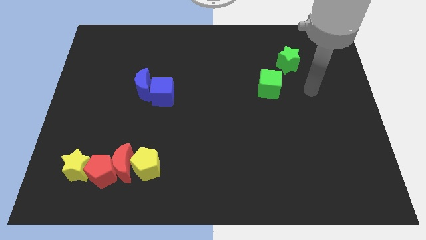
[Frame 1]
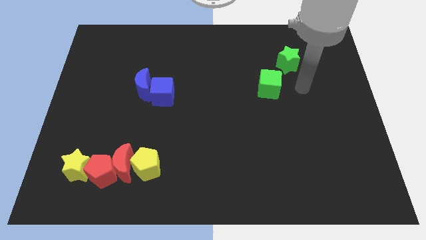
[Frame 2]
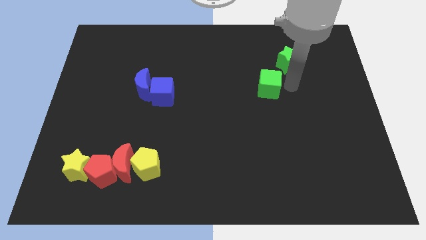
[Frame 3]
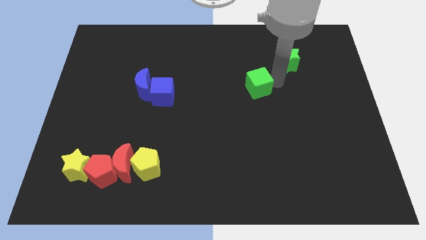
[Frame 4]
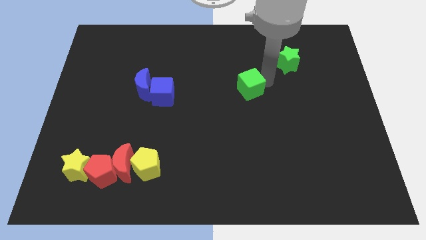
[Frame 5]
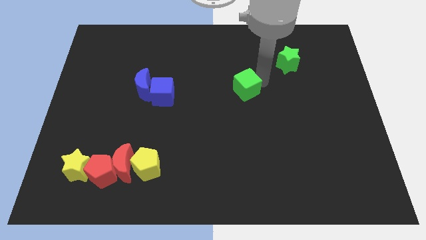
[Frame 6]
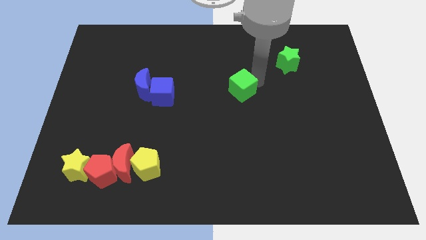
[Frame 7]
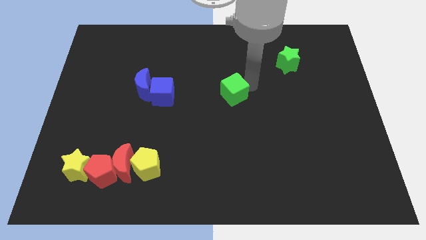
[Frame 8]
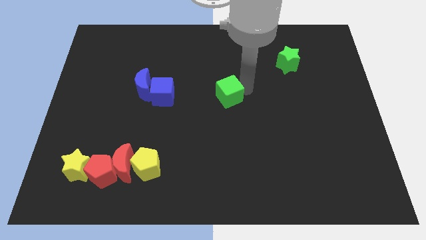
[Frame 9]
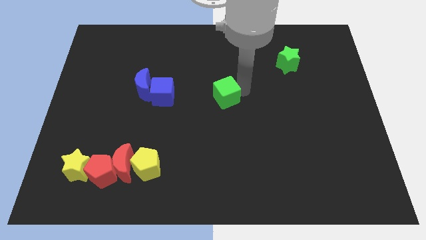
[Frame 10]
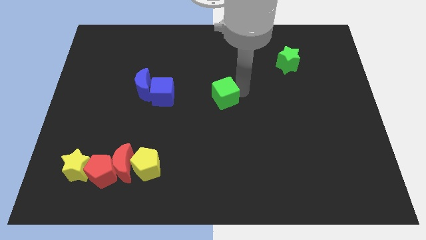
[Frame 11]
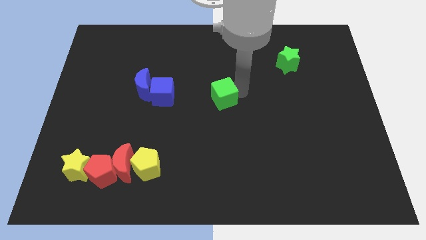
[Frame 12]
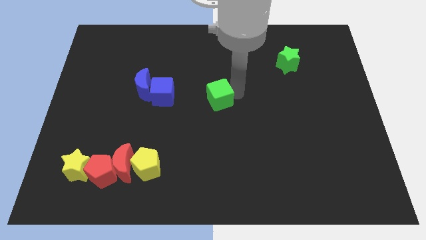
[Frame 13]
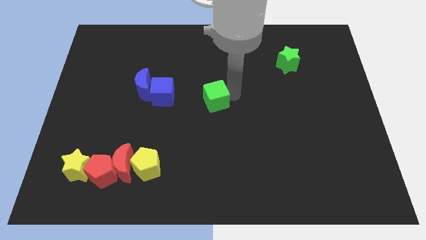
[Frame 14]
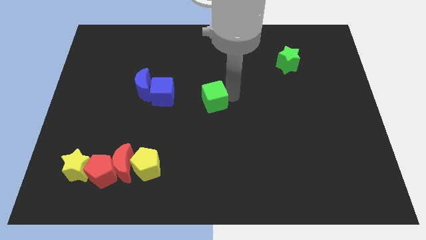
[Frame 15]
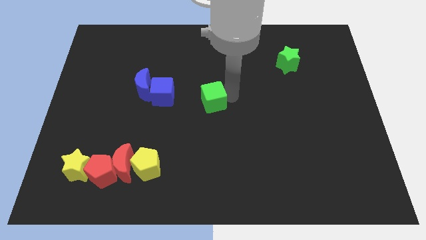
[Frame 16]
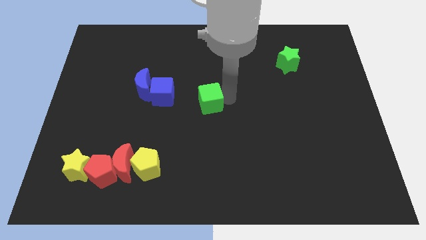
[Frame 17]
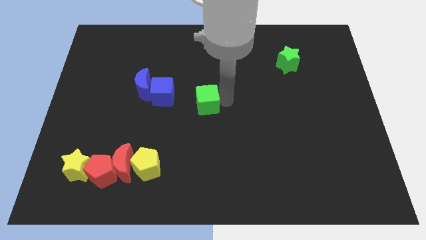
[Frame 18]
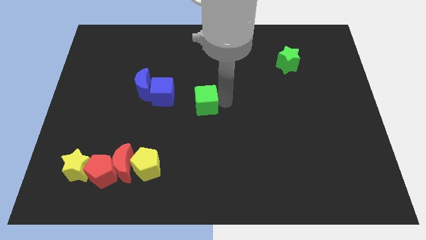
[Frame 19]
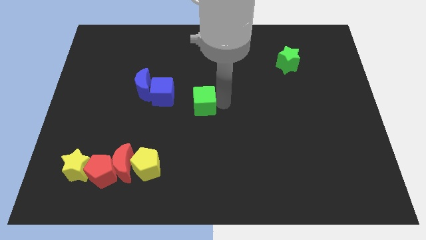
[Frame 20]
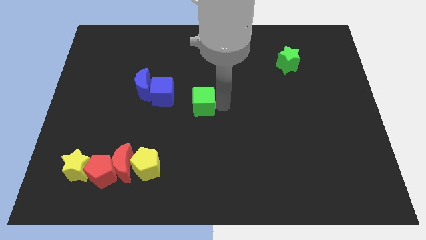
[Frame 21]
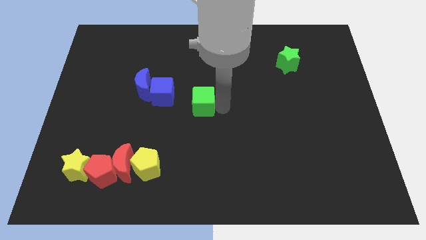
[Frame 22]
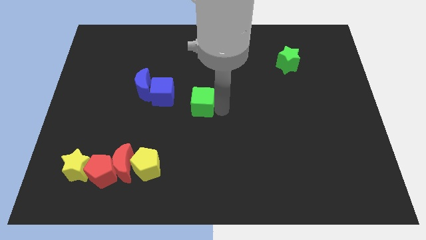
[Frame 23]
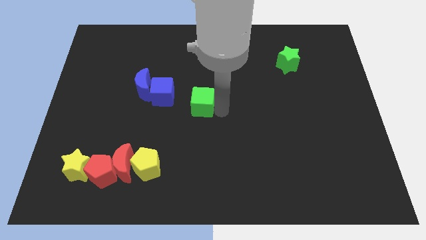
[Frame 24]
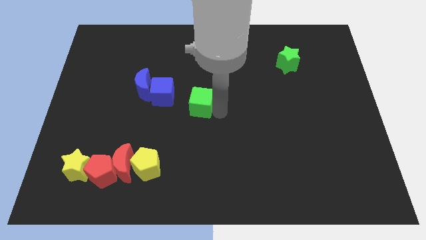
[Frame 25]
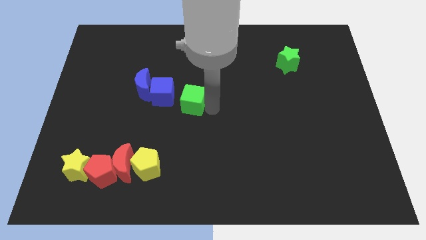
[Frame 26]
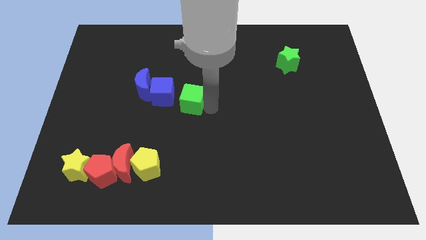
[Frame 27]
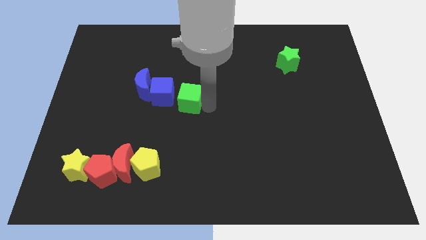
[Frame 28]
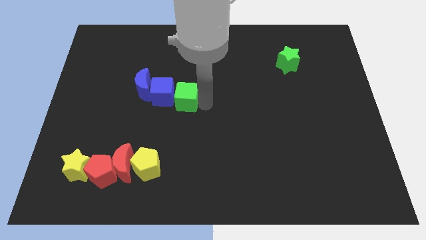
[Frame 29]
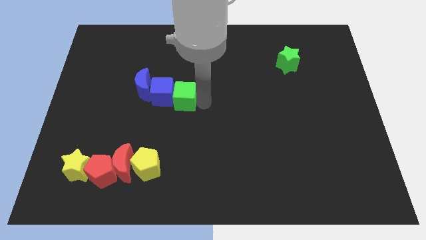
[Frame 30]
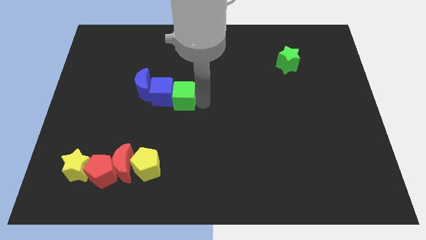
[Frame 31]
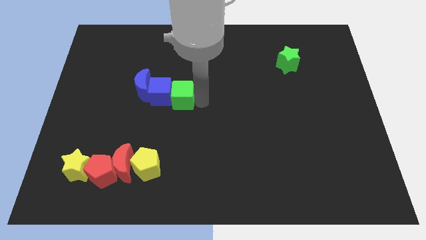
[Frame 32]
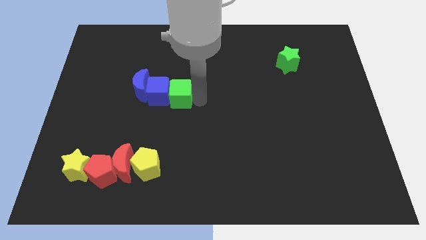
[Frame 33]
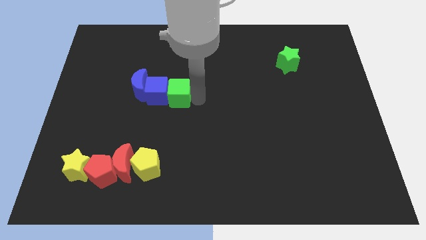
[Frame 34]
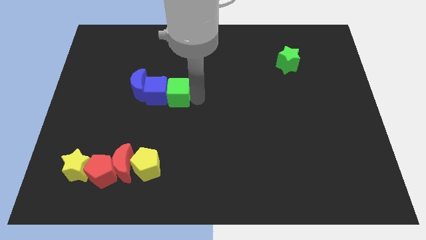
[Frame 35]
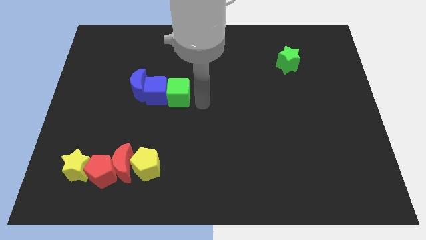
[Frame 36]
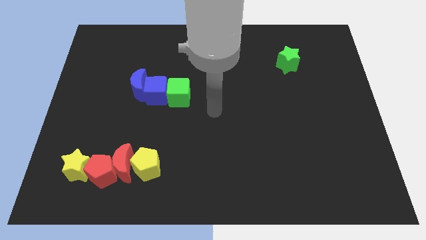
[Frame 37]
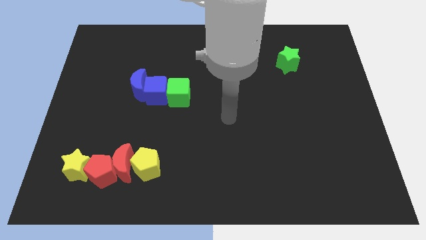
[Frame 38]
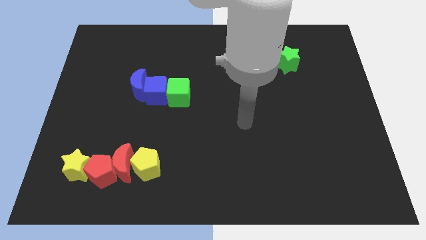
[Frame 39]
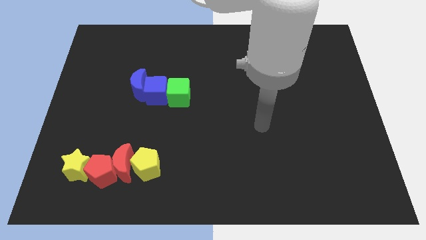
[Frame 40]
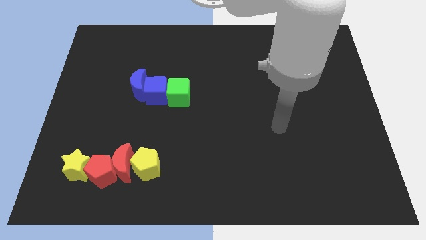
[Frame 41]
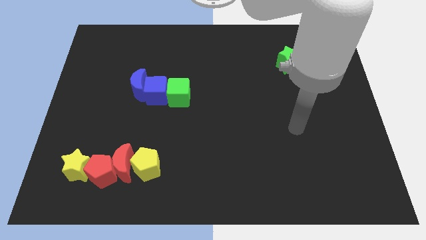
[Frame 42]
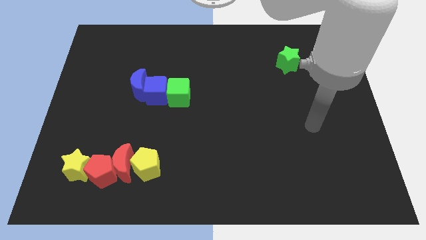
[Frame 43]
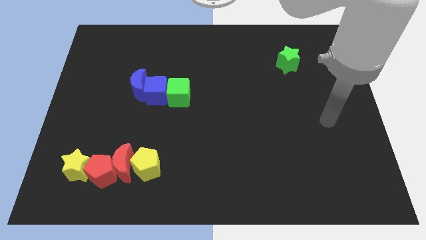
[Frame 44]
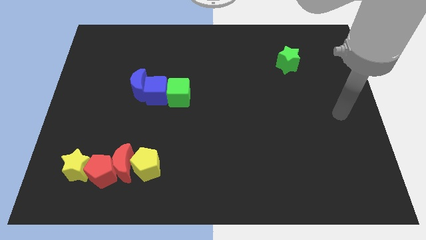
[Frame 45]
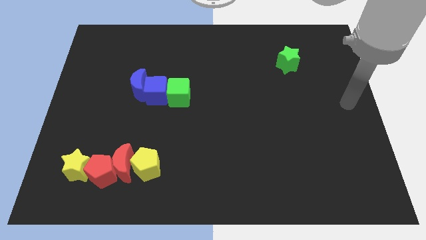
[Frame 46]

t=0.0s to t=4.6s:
push the green cube into the blue cube

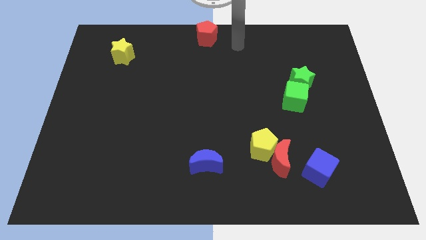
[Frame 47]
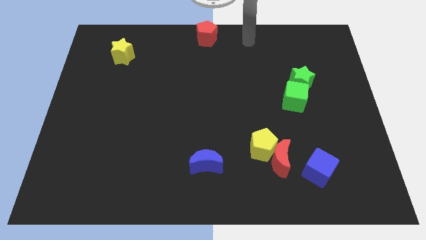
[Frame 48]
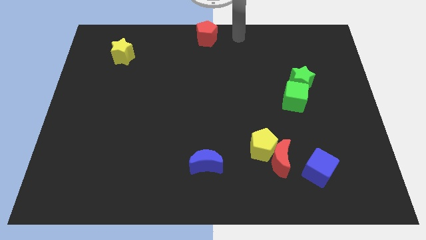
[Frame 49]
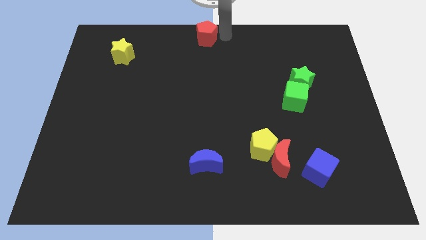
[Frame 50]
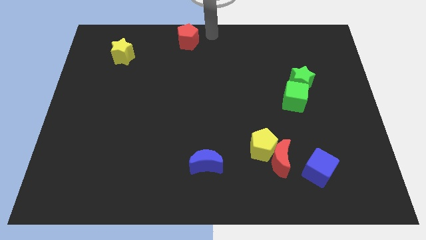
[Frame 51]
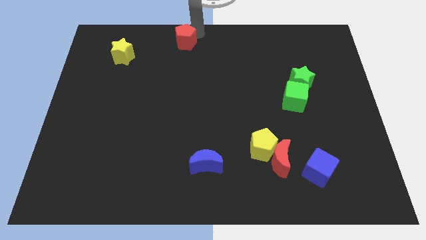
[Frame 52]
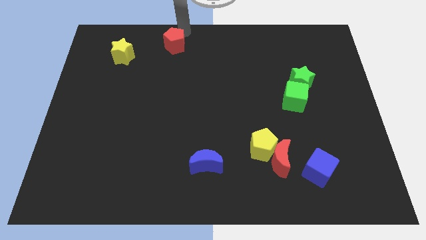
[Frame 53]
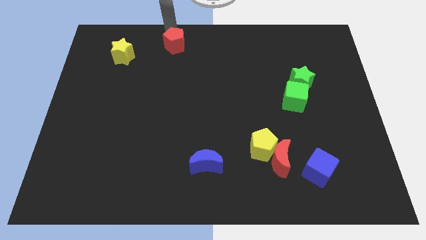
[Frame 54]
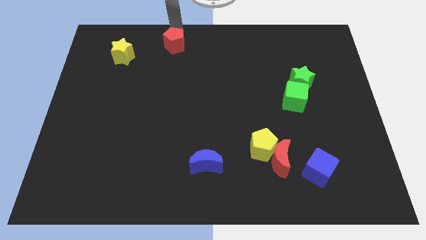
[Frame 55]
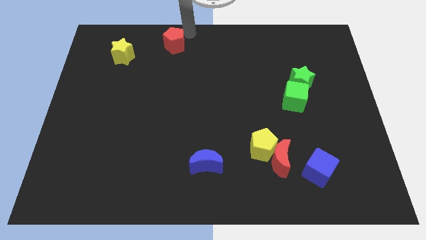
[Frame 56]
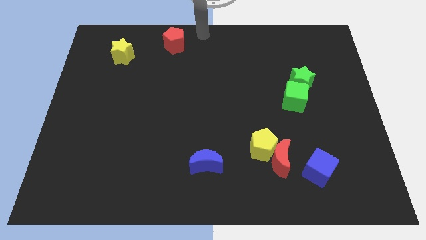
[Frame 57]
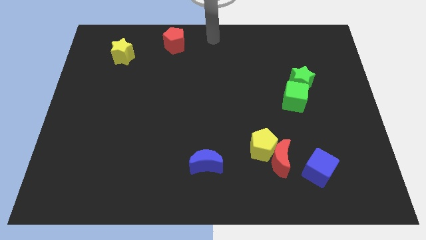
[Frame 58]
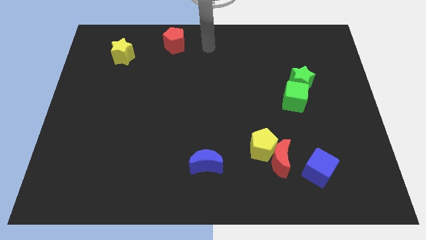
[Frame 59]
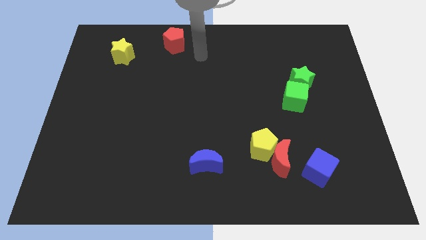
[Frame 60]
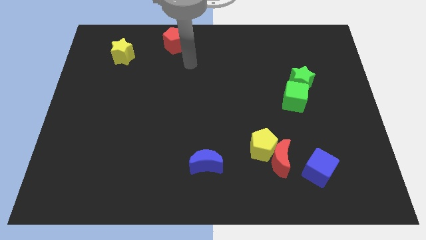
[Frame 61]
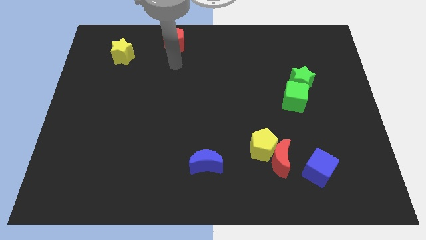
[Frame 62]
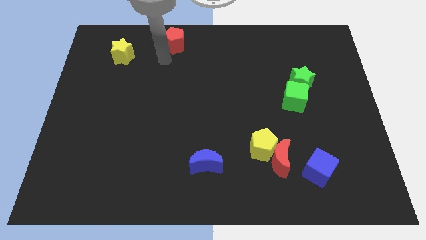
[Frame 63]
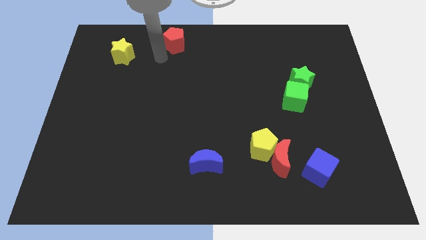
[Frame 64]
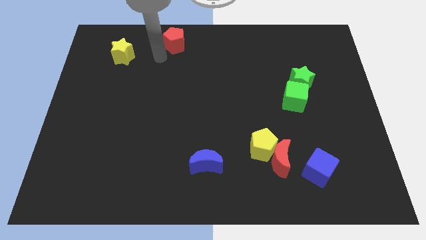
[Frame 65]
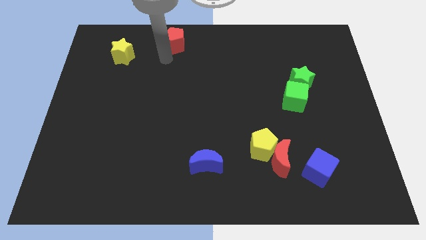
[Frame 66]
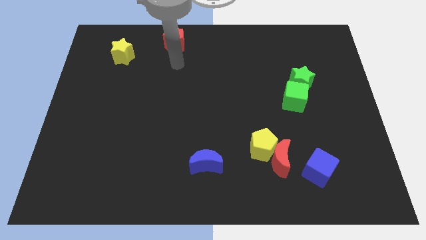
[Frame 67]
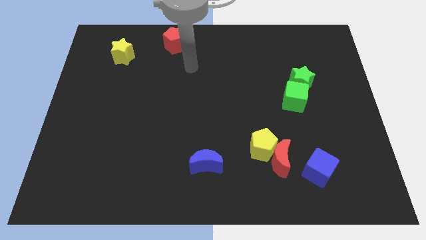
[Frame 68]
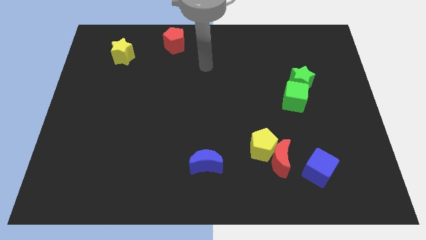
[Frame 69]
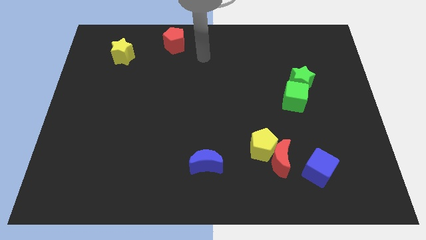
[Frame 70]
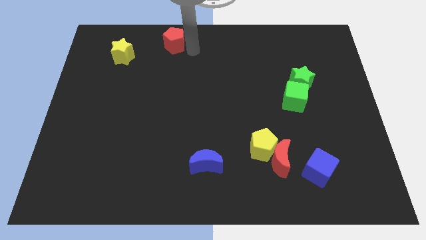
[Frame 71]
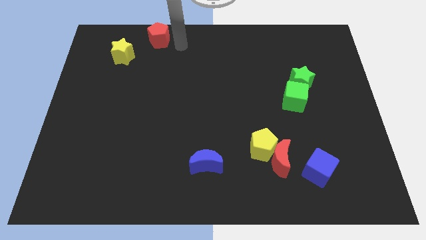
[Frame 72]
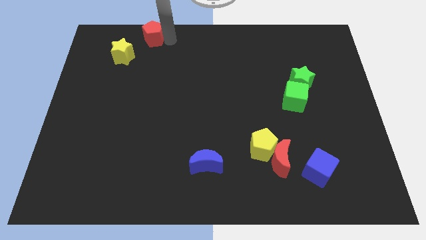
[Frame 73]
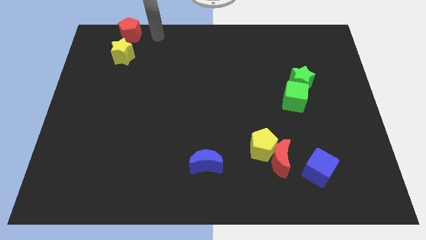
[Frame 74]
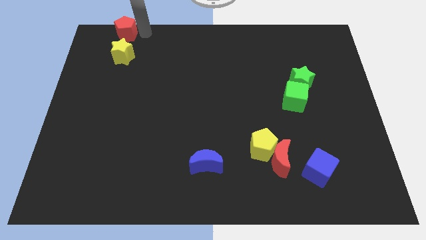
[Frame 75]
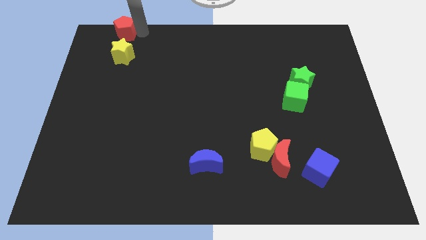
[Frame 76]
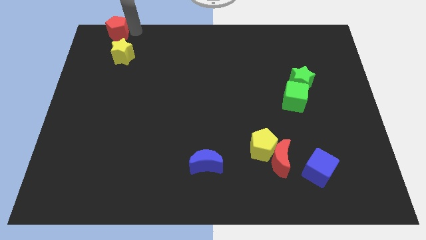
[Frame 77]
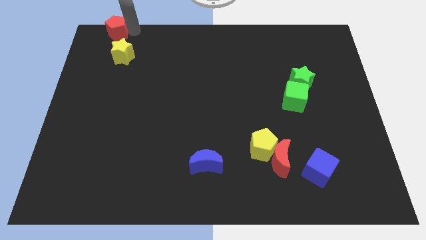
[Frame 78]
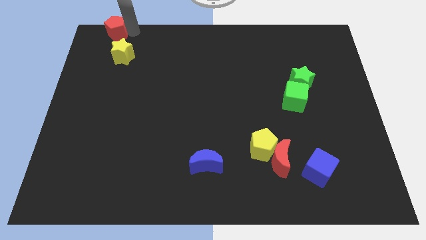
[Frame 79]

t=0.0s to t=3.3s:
place red pentagon above yellow star

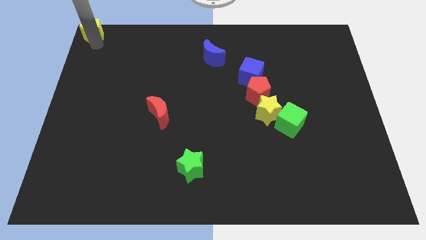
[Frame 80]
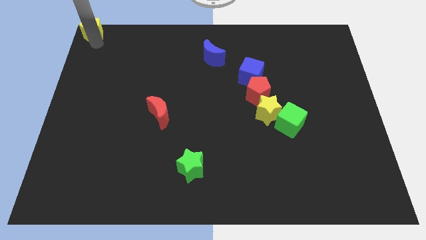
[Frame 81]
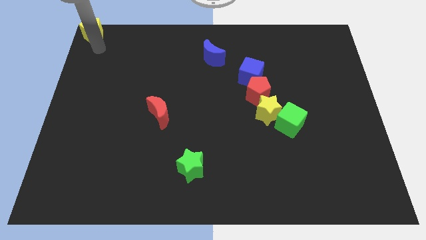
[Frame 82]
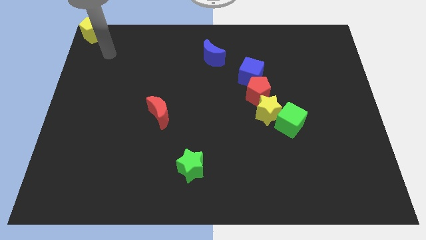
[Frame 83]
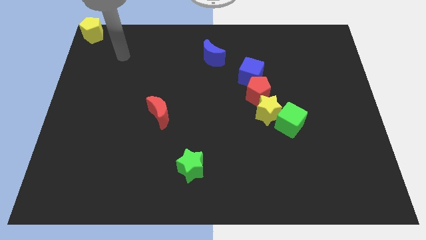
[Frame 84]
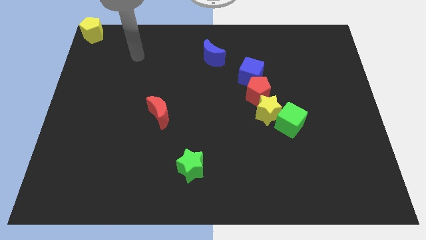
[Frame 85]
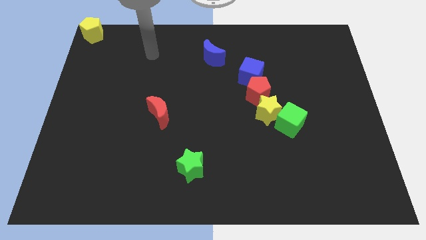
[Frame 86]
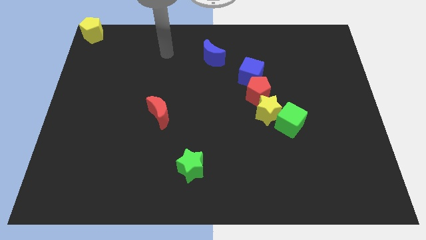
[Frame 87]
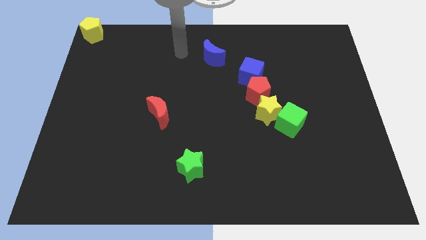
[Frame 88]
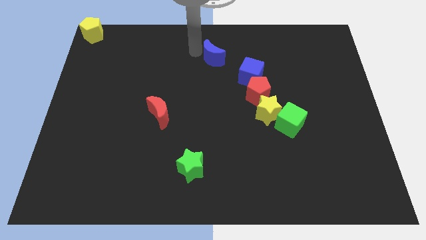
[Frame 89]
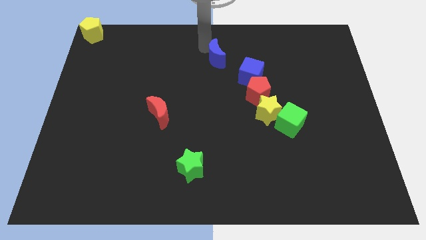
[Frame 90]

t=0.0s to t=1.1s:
go and tap the left side of the blue crescent
